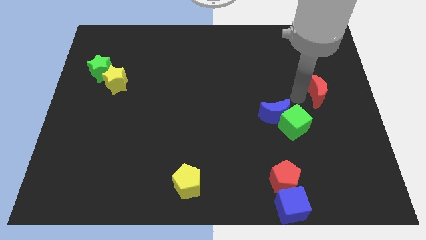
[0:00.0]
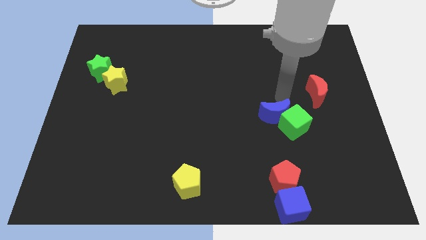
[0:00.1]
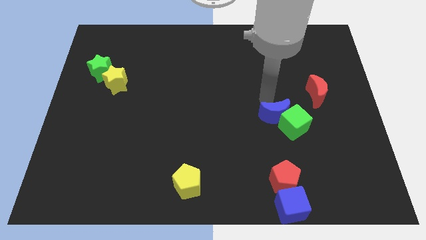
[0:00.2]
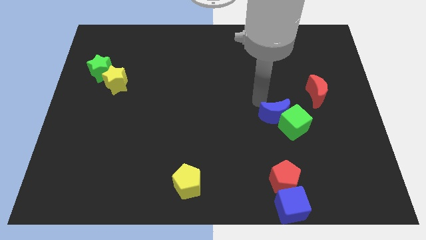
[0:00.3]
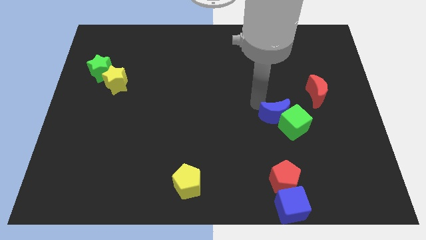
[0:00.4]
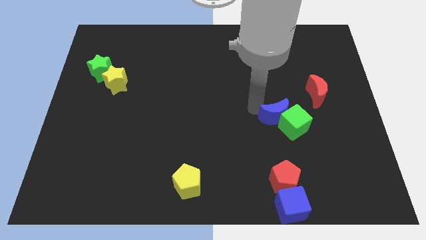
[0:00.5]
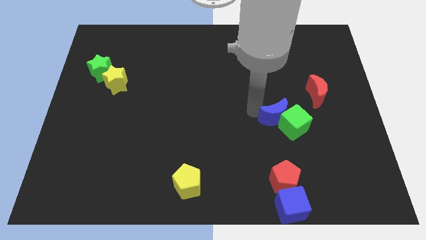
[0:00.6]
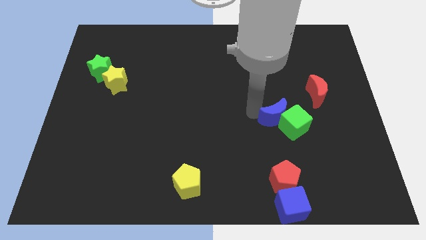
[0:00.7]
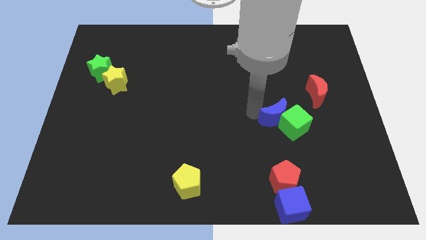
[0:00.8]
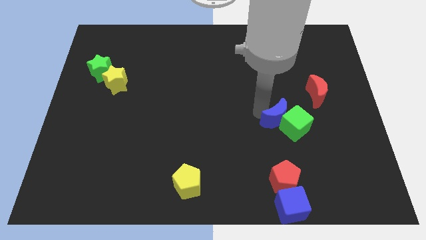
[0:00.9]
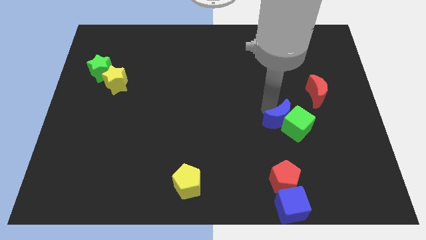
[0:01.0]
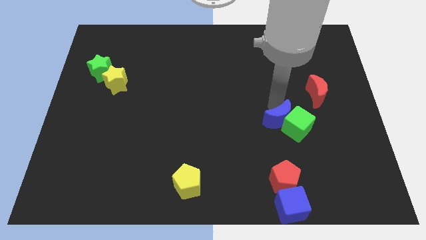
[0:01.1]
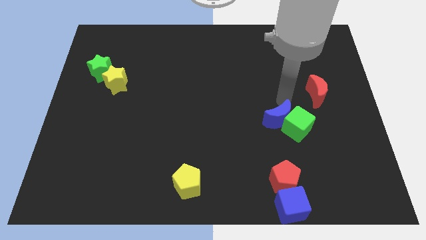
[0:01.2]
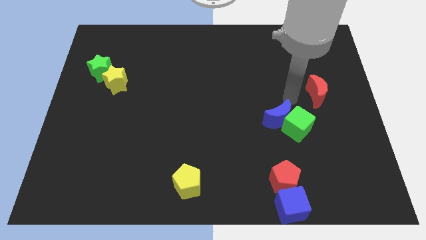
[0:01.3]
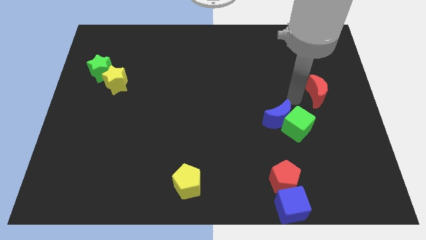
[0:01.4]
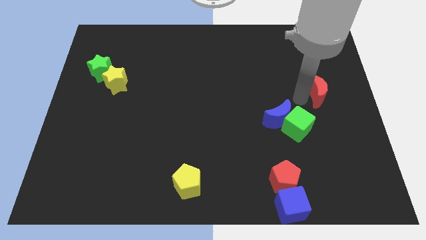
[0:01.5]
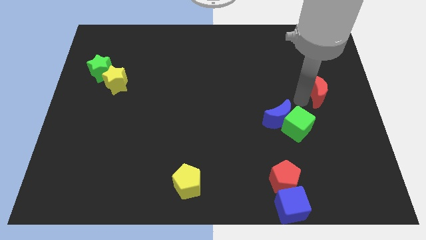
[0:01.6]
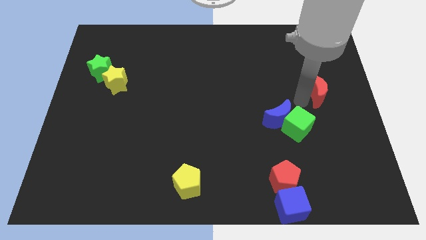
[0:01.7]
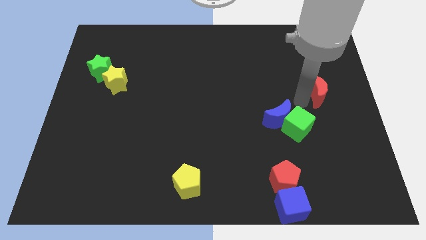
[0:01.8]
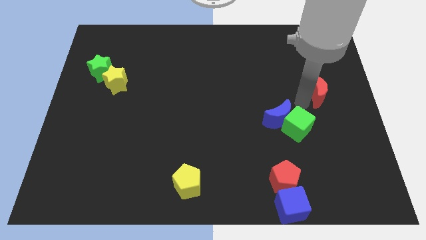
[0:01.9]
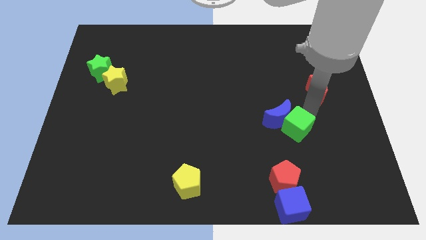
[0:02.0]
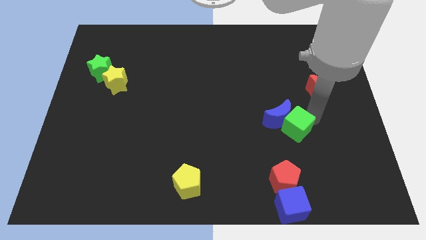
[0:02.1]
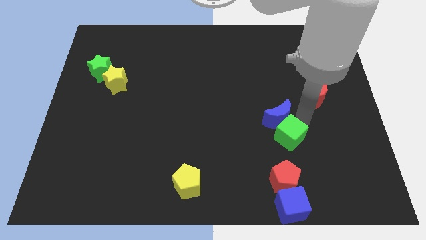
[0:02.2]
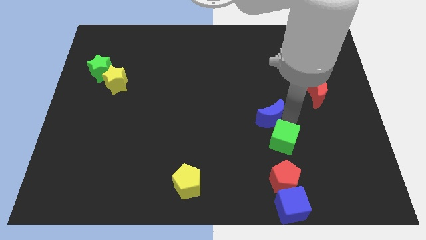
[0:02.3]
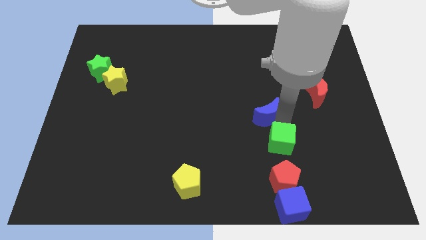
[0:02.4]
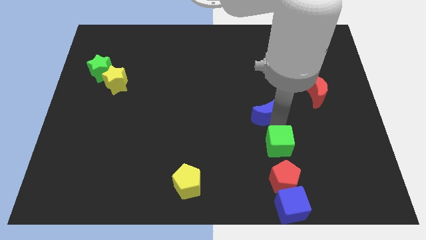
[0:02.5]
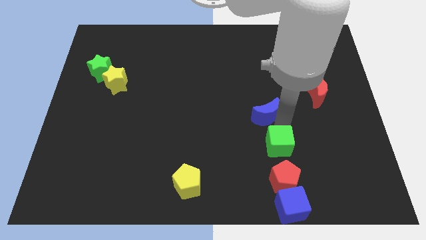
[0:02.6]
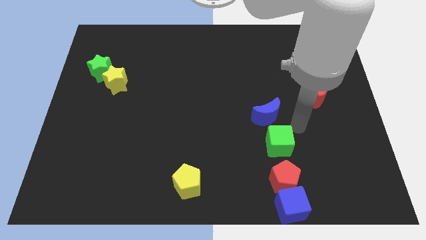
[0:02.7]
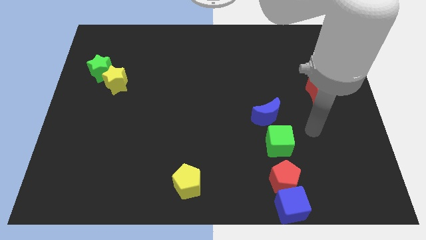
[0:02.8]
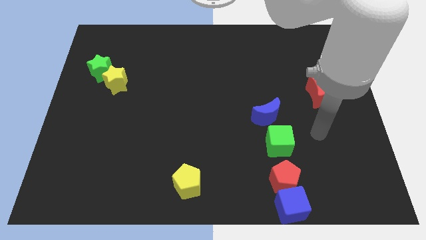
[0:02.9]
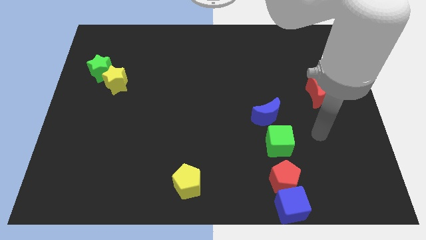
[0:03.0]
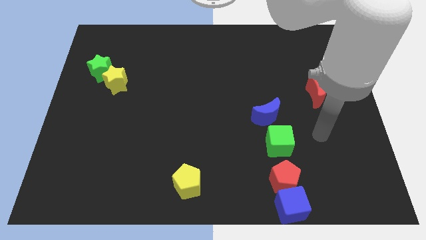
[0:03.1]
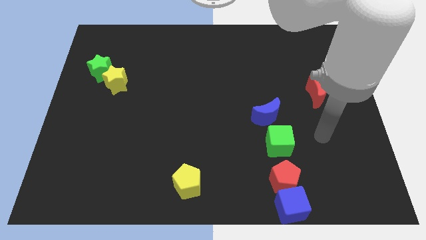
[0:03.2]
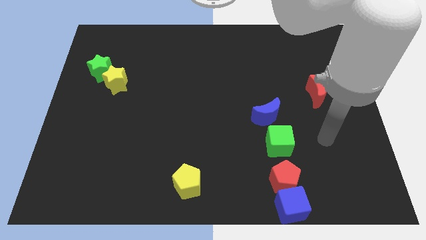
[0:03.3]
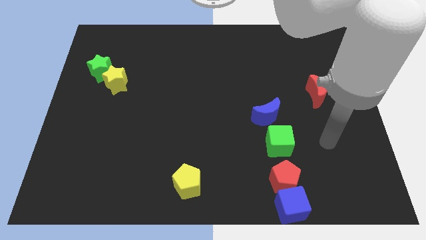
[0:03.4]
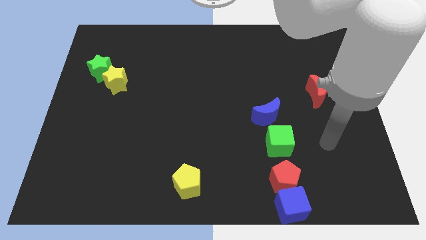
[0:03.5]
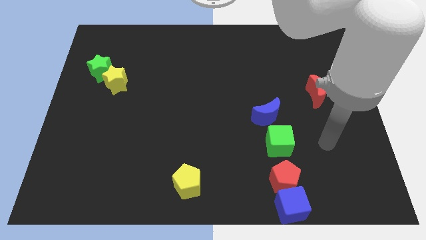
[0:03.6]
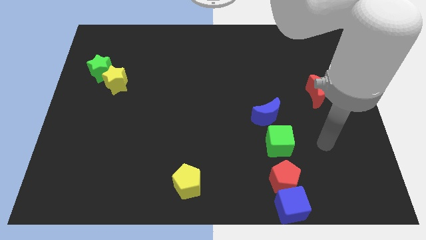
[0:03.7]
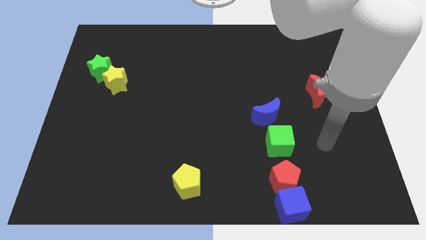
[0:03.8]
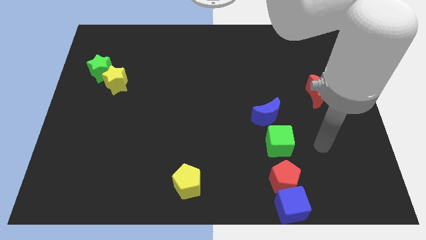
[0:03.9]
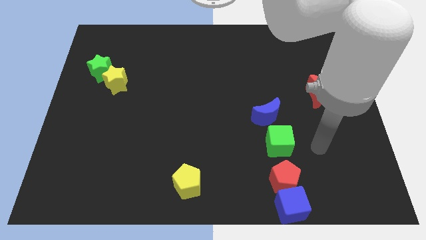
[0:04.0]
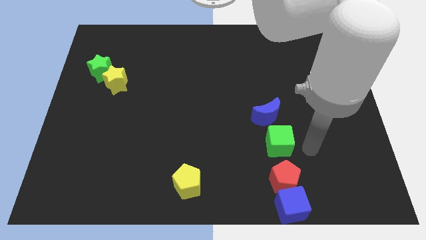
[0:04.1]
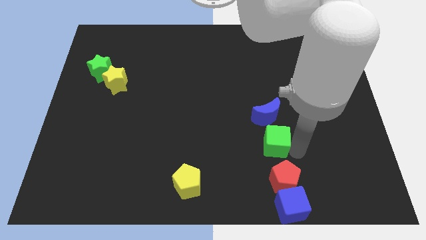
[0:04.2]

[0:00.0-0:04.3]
move the green cube to the top side of the red pentagon

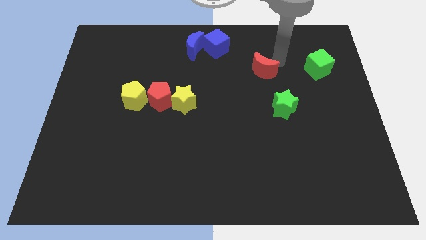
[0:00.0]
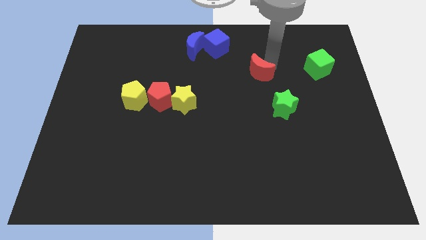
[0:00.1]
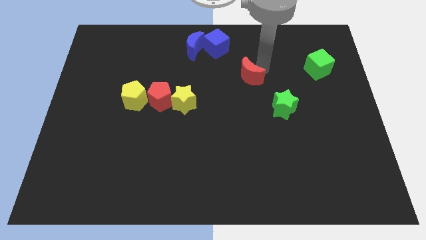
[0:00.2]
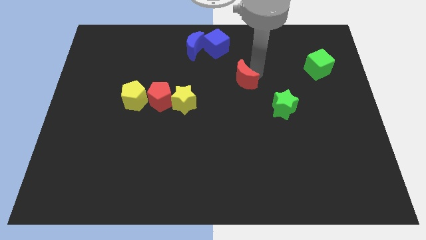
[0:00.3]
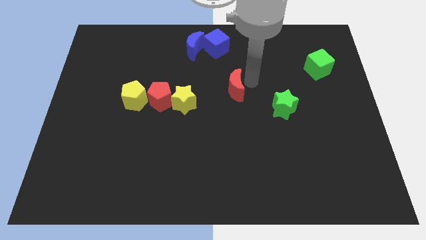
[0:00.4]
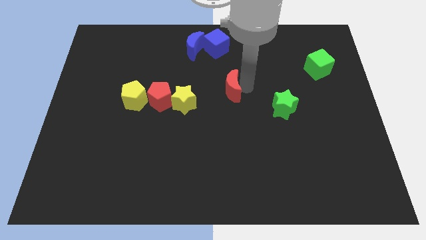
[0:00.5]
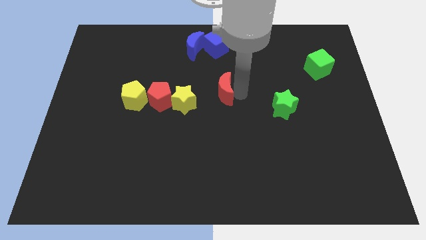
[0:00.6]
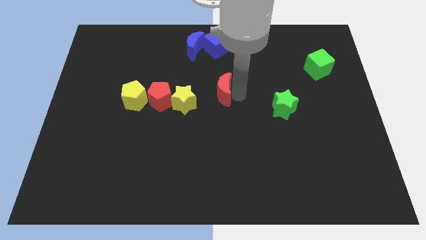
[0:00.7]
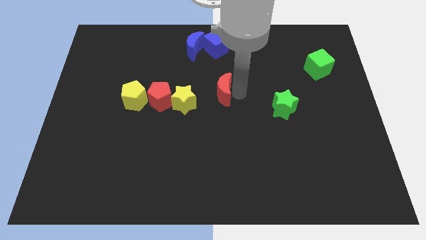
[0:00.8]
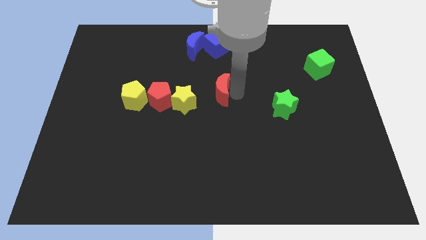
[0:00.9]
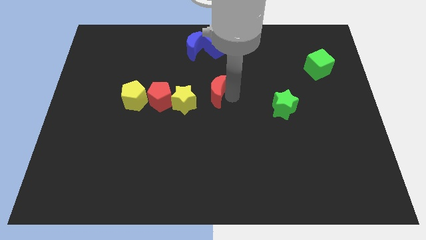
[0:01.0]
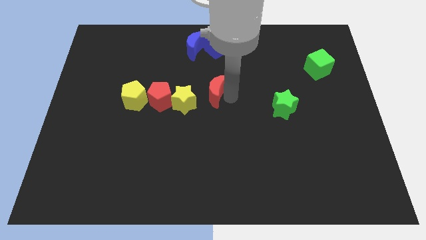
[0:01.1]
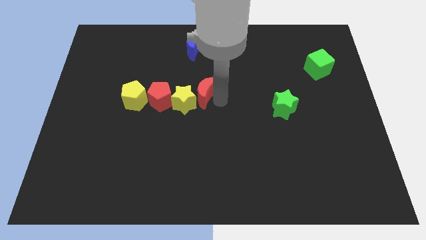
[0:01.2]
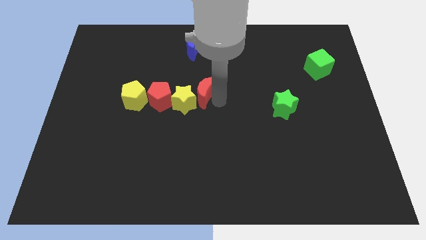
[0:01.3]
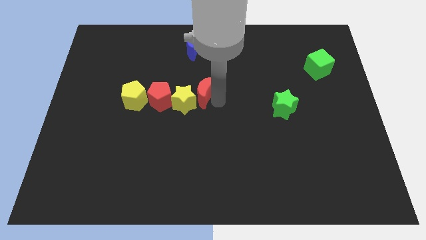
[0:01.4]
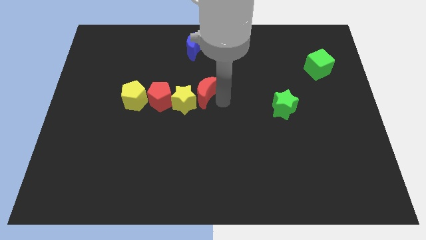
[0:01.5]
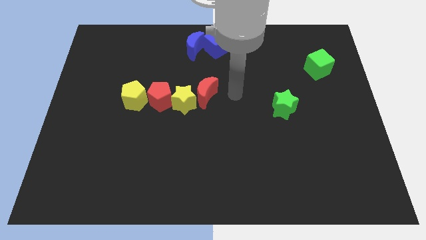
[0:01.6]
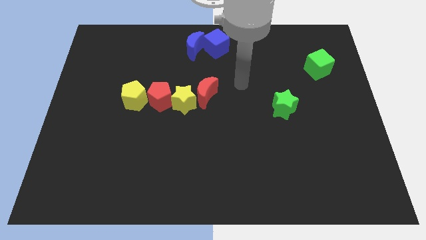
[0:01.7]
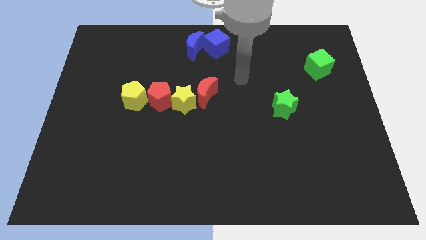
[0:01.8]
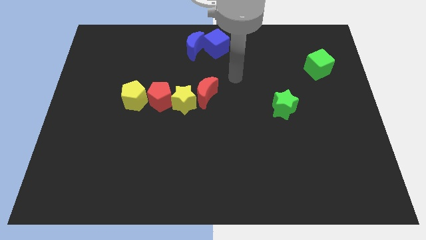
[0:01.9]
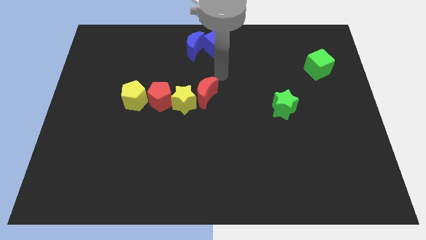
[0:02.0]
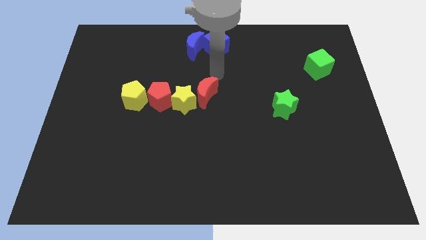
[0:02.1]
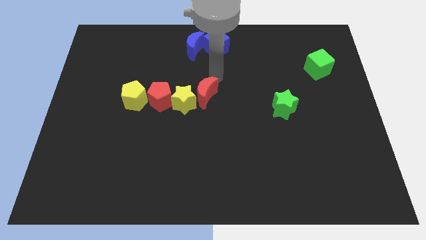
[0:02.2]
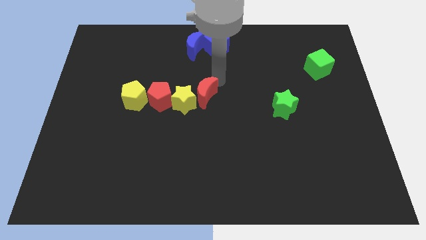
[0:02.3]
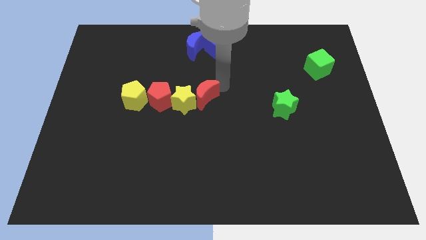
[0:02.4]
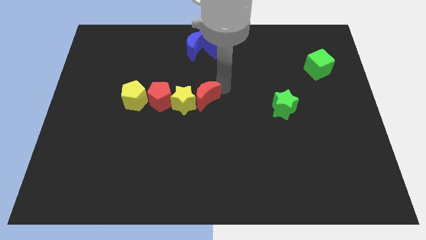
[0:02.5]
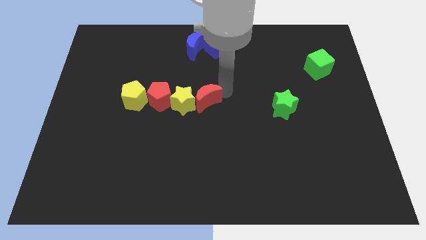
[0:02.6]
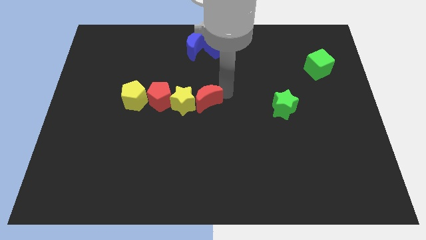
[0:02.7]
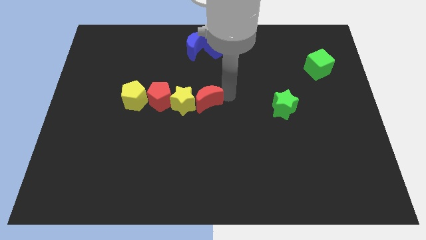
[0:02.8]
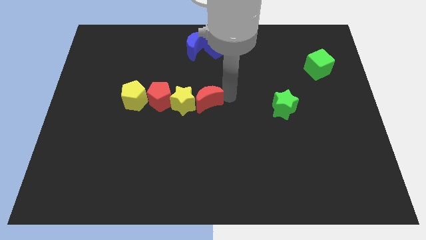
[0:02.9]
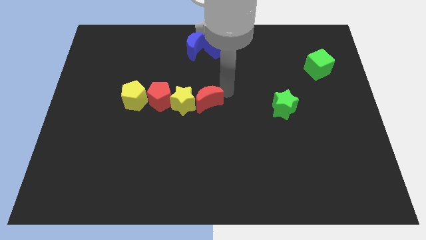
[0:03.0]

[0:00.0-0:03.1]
place the red crescent right side of the yellow star

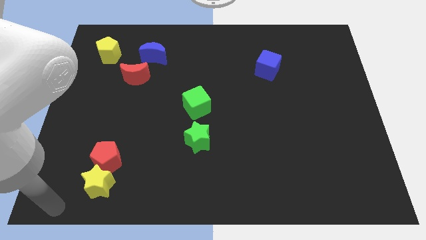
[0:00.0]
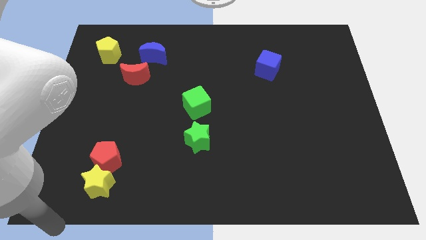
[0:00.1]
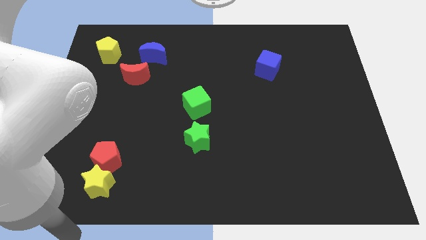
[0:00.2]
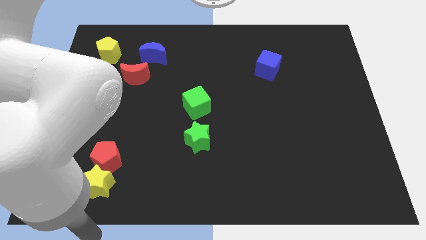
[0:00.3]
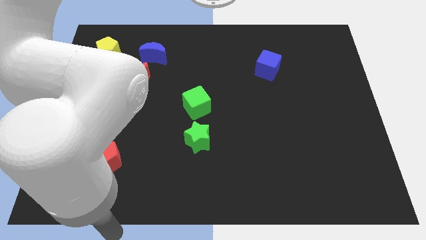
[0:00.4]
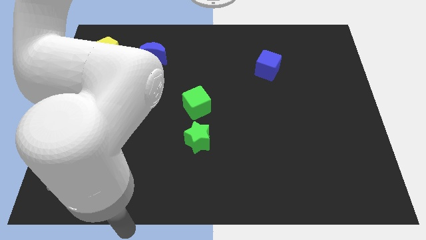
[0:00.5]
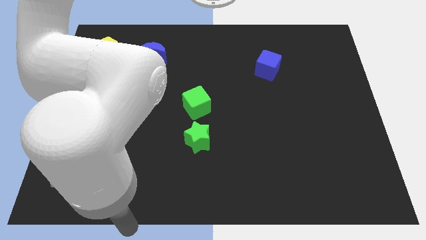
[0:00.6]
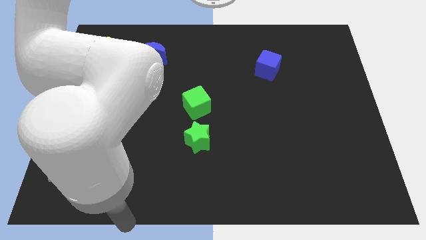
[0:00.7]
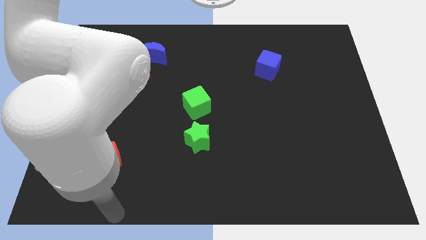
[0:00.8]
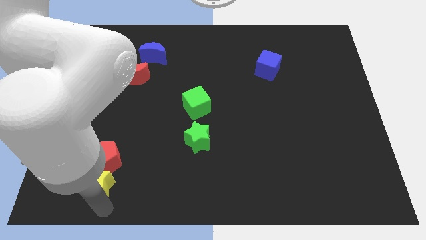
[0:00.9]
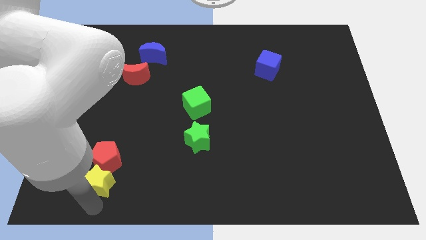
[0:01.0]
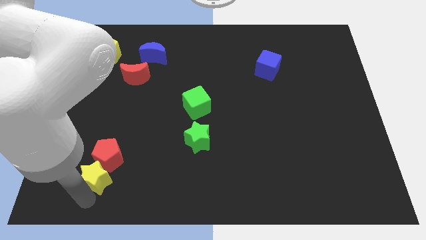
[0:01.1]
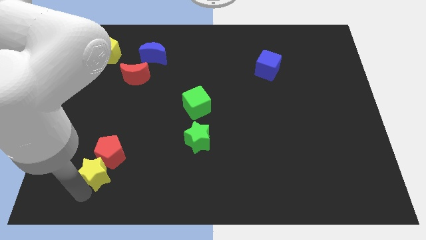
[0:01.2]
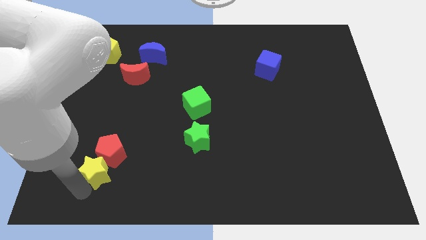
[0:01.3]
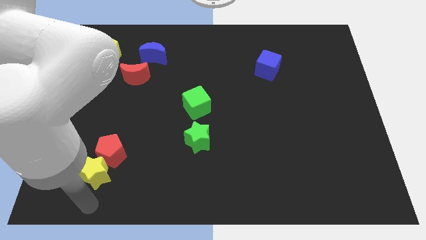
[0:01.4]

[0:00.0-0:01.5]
push the yellow star into the red pentagon

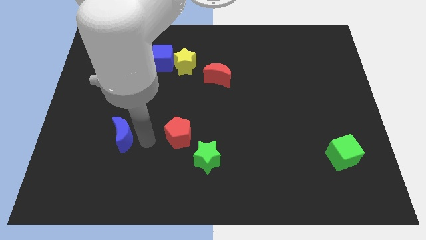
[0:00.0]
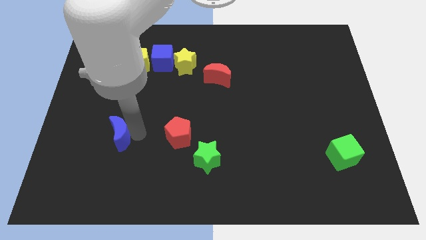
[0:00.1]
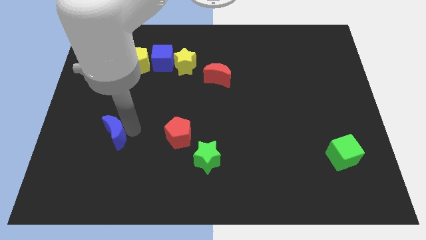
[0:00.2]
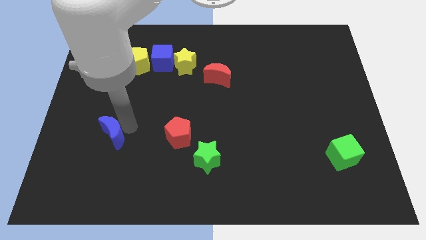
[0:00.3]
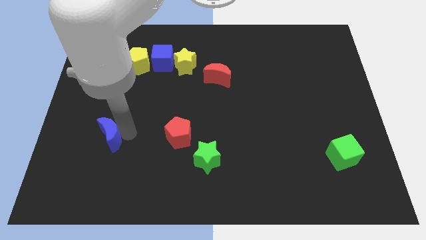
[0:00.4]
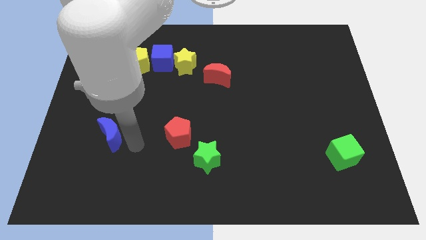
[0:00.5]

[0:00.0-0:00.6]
push blue moon slightly to the left
